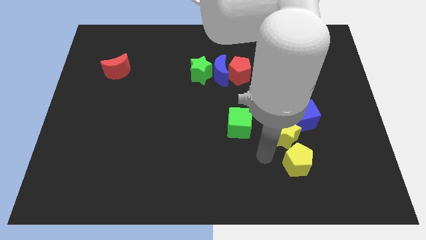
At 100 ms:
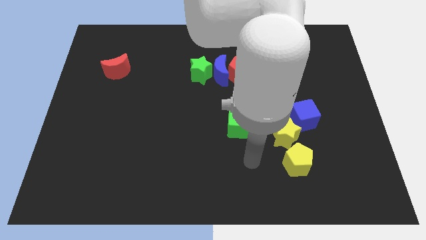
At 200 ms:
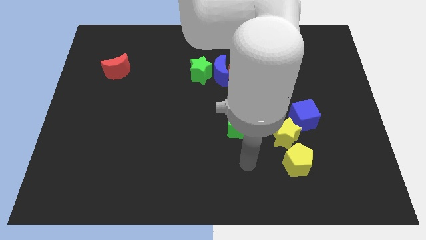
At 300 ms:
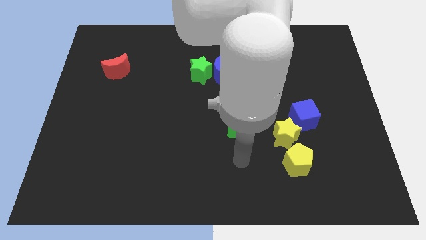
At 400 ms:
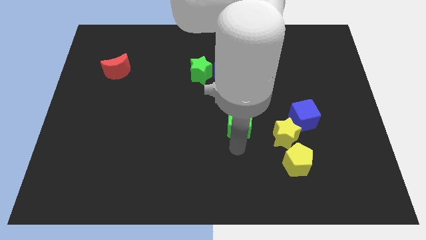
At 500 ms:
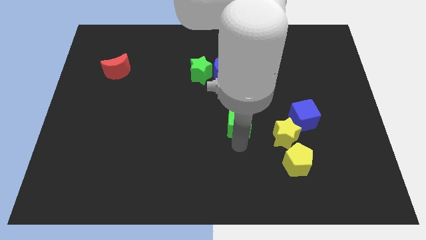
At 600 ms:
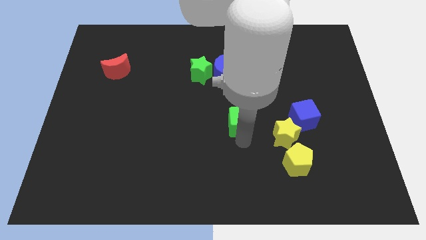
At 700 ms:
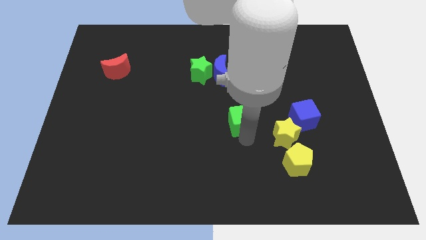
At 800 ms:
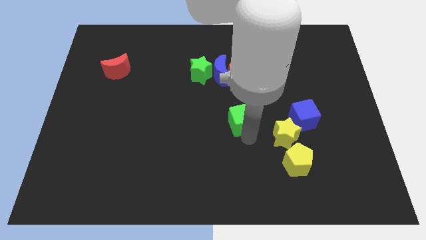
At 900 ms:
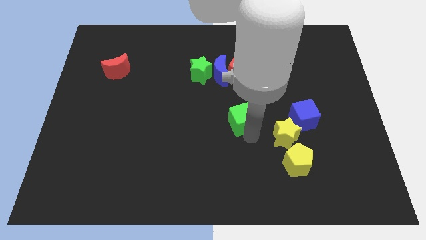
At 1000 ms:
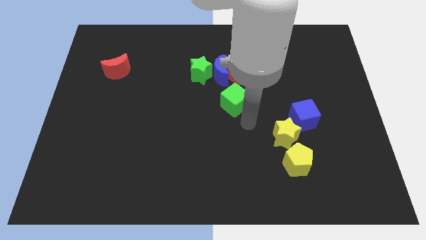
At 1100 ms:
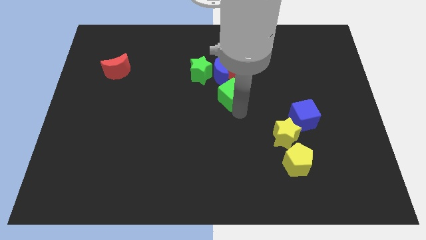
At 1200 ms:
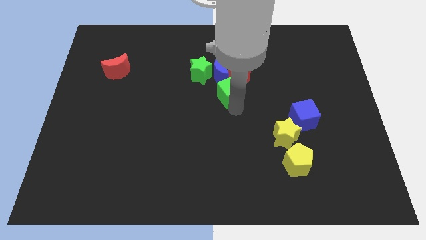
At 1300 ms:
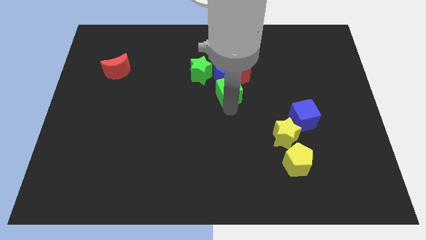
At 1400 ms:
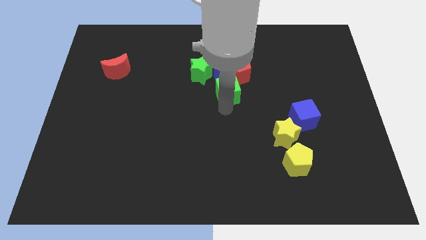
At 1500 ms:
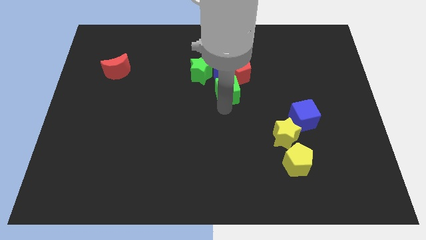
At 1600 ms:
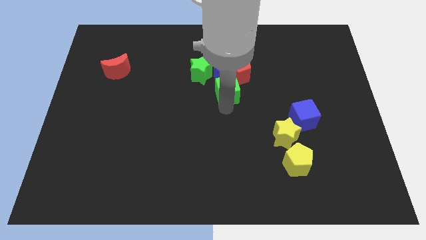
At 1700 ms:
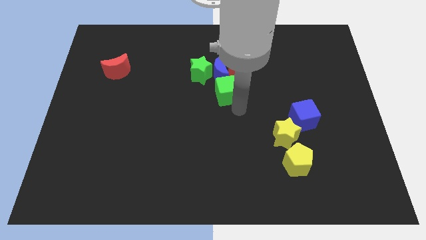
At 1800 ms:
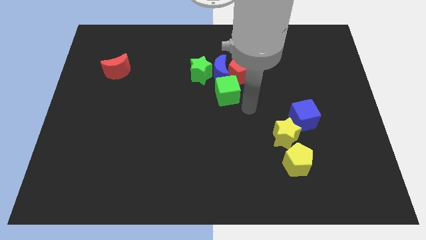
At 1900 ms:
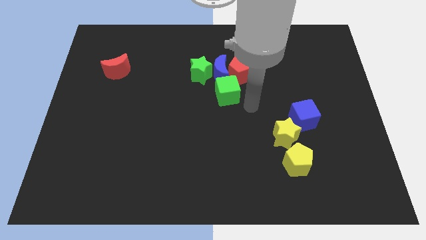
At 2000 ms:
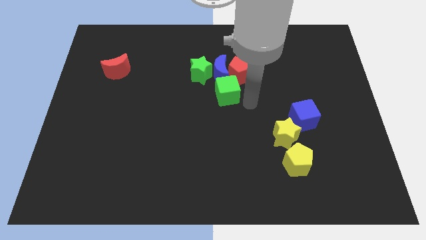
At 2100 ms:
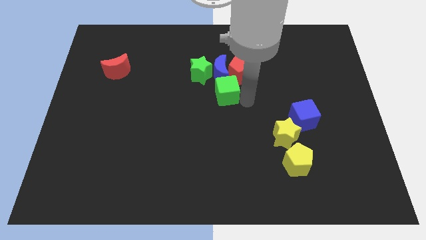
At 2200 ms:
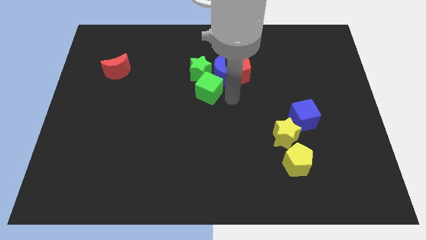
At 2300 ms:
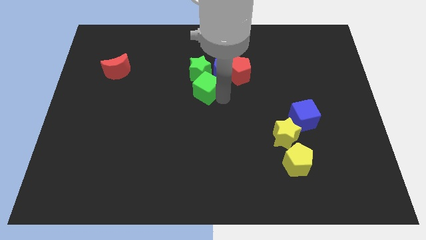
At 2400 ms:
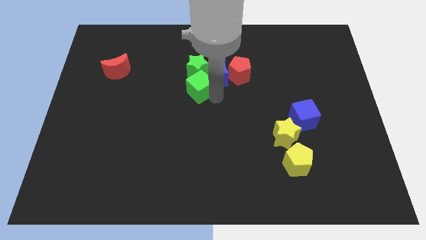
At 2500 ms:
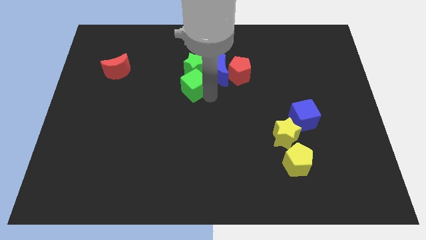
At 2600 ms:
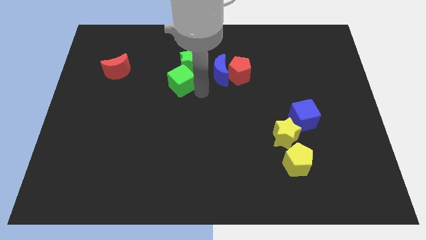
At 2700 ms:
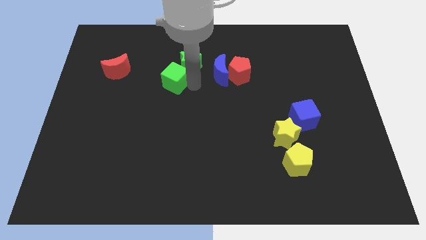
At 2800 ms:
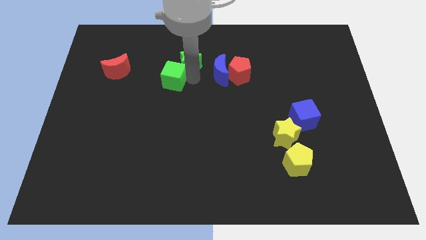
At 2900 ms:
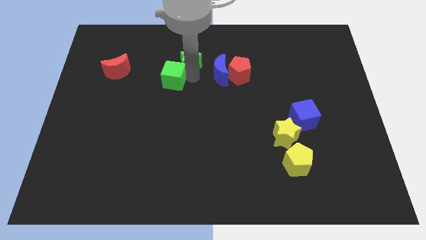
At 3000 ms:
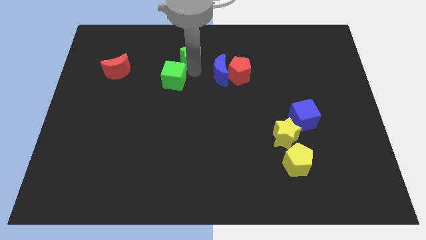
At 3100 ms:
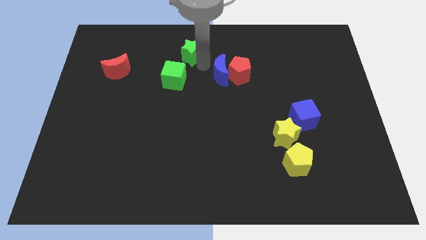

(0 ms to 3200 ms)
place the green cube to the bottom left side of the green star

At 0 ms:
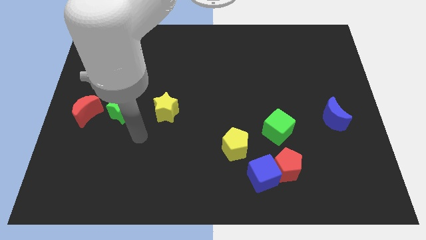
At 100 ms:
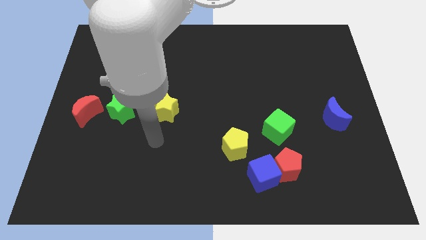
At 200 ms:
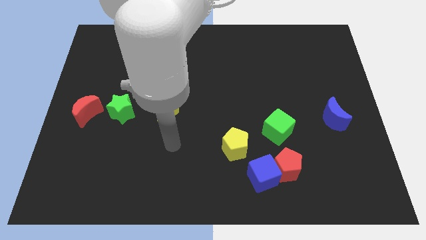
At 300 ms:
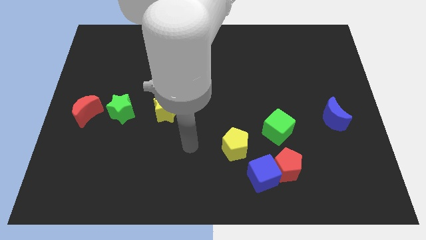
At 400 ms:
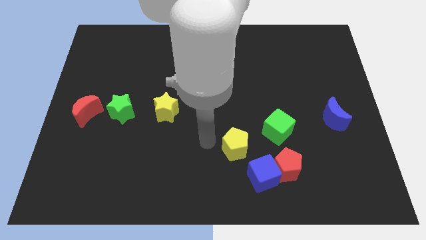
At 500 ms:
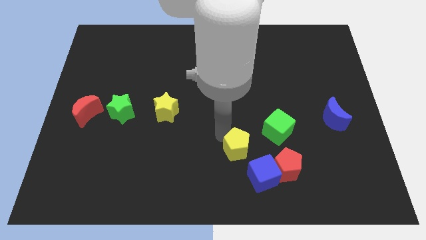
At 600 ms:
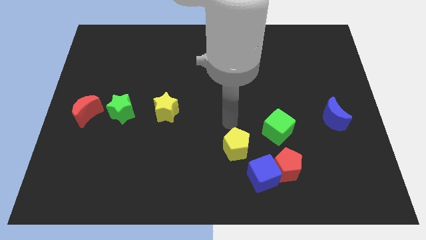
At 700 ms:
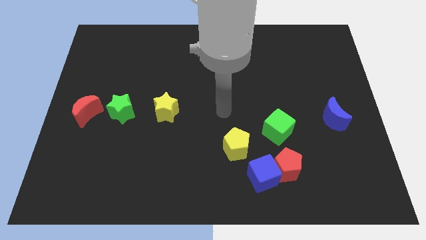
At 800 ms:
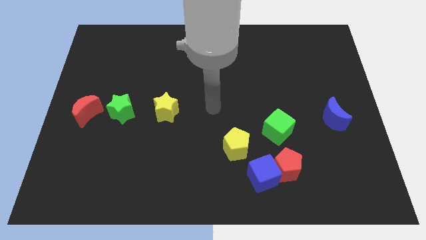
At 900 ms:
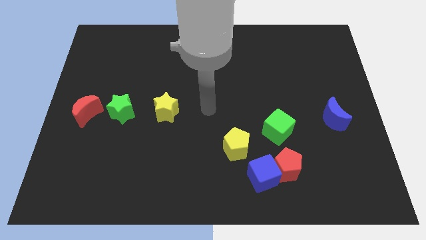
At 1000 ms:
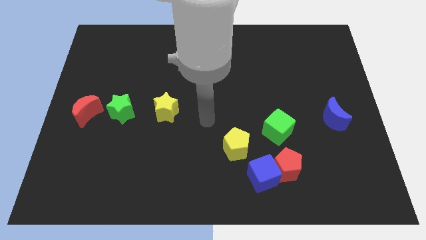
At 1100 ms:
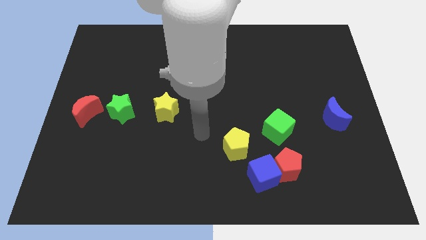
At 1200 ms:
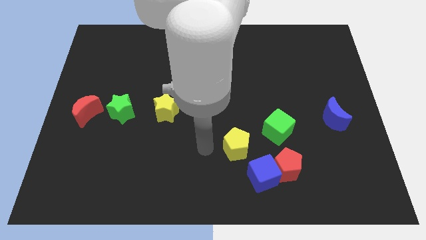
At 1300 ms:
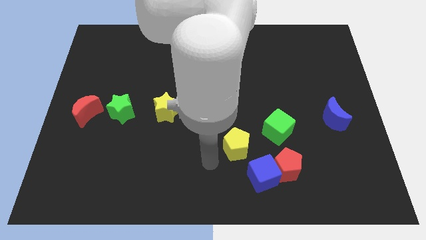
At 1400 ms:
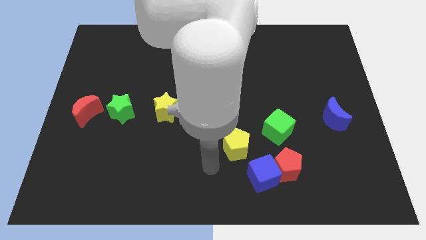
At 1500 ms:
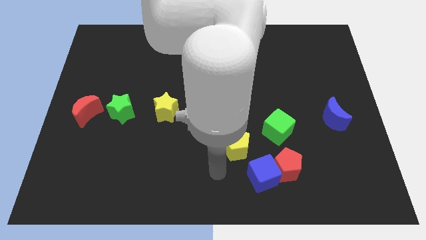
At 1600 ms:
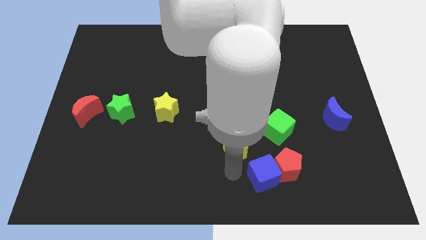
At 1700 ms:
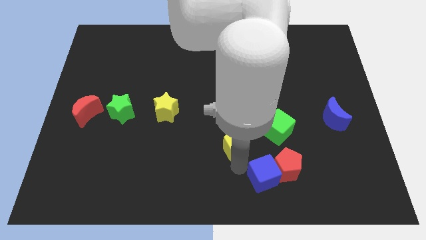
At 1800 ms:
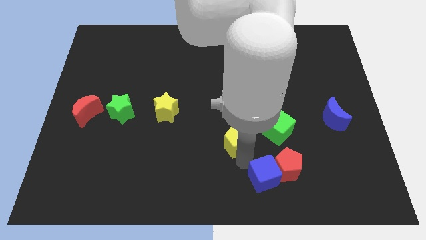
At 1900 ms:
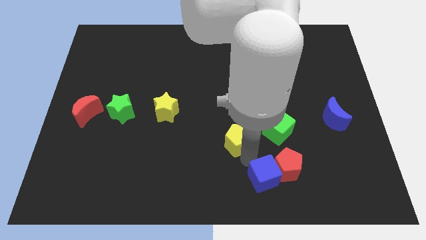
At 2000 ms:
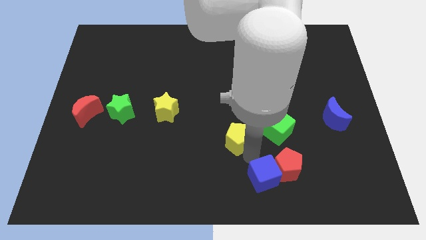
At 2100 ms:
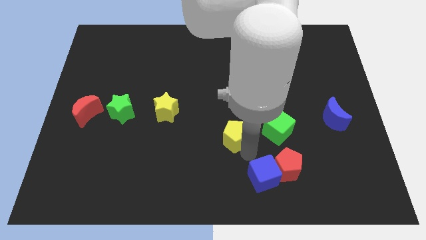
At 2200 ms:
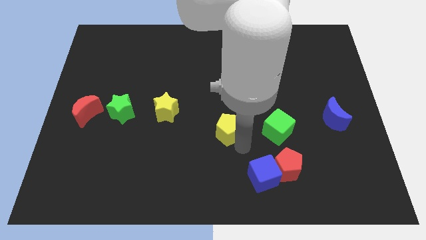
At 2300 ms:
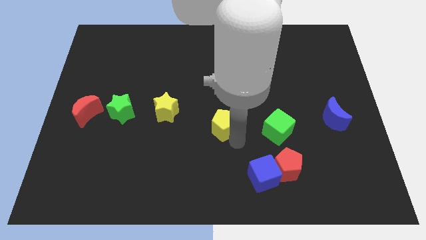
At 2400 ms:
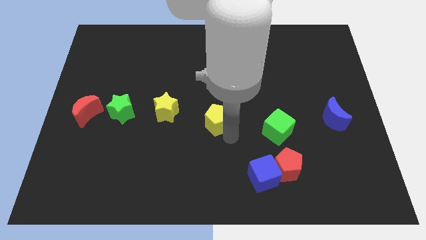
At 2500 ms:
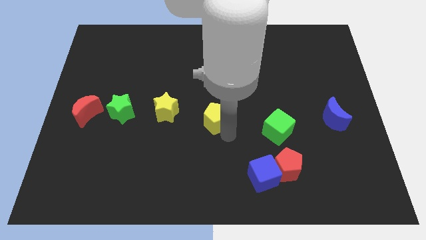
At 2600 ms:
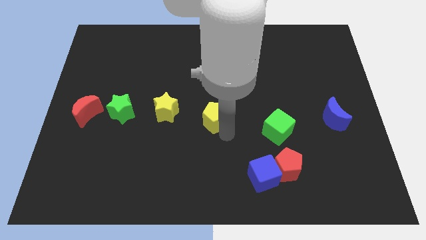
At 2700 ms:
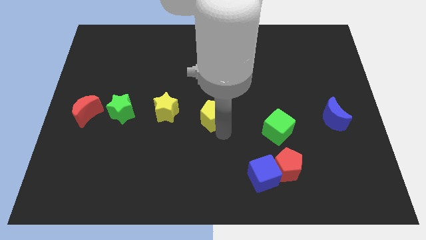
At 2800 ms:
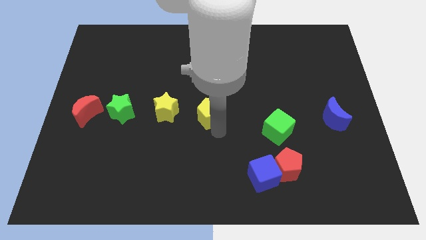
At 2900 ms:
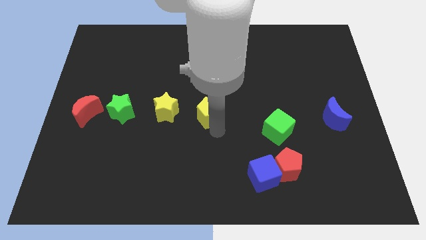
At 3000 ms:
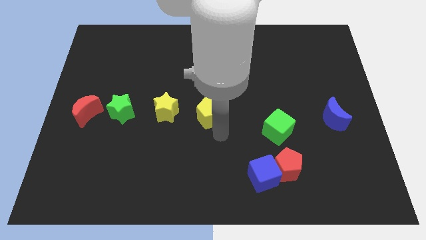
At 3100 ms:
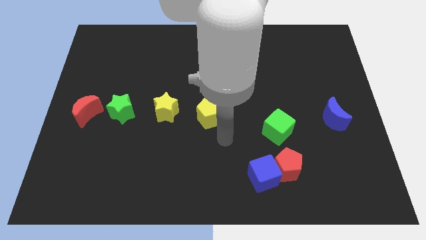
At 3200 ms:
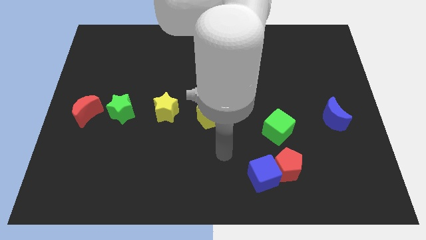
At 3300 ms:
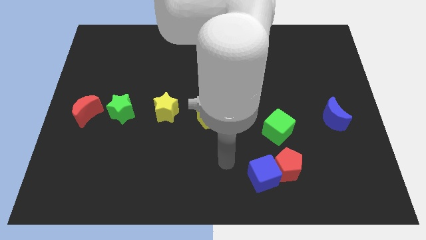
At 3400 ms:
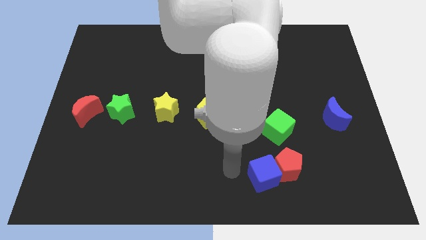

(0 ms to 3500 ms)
push the yellow pentagon parallel to yellow star

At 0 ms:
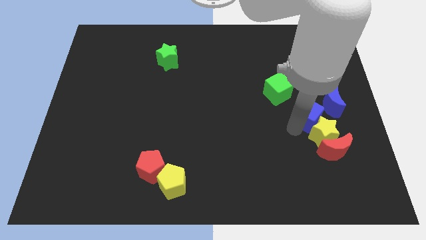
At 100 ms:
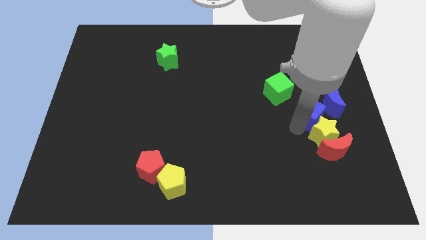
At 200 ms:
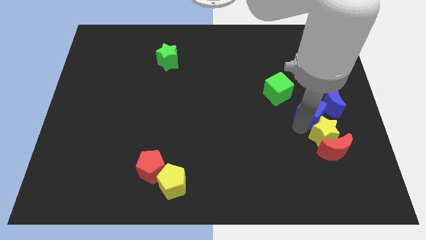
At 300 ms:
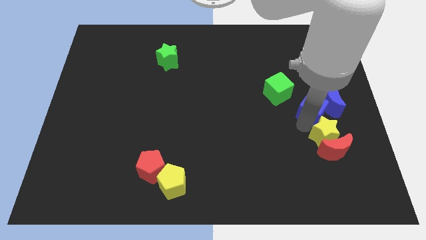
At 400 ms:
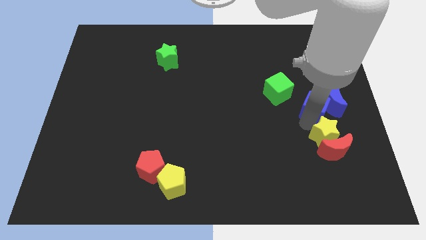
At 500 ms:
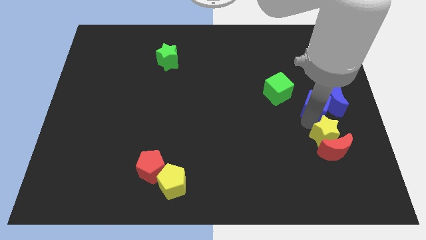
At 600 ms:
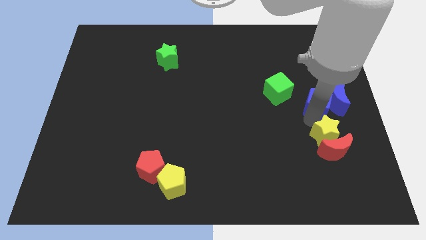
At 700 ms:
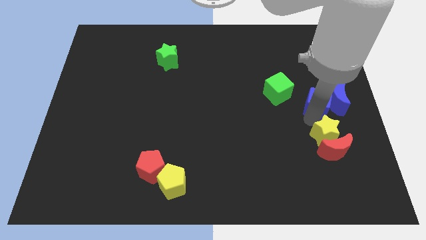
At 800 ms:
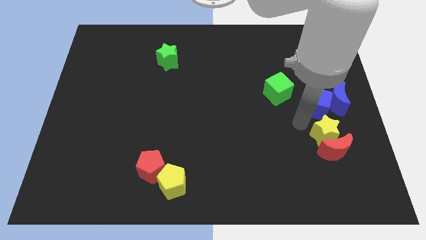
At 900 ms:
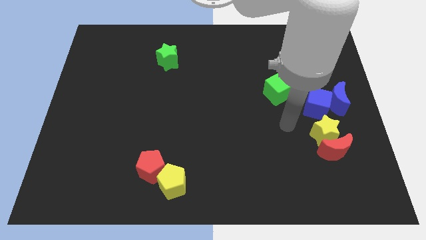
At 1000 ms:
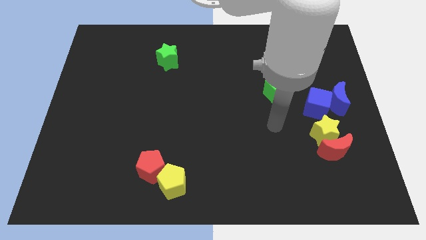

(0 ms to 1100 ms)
push blue cube in to blue moon

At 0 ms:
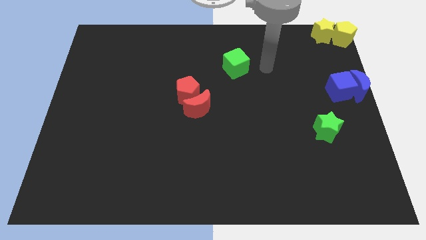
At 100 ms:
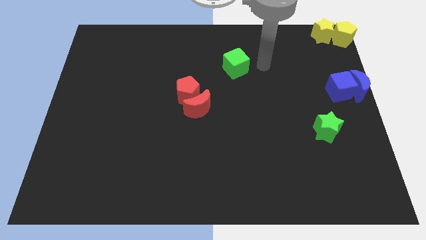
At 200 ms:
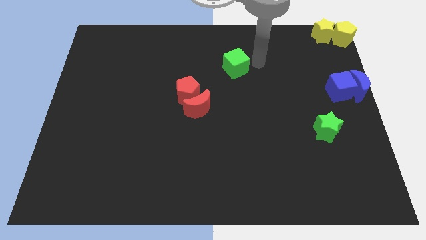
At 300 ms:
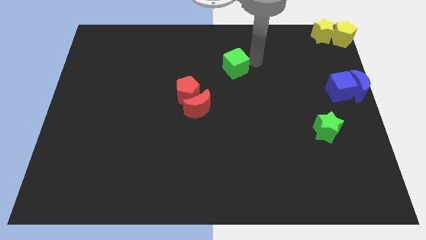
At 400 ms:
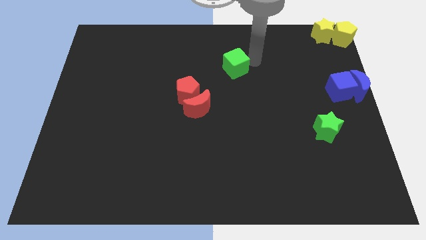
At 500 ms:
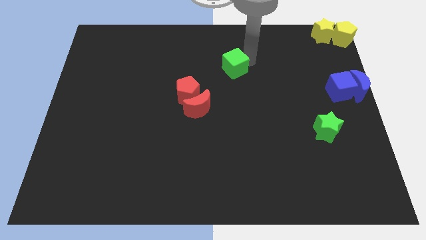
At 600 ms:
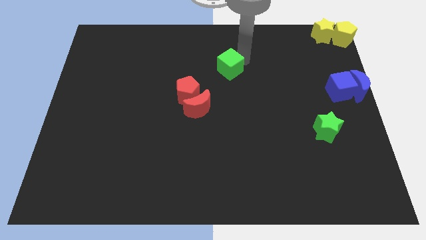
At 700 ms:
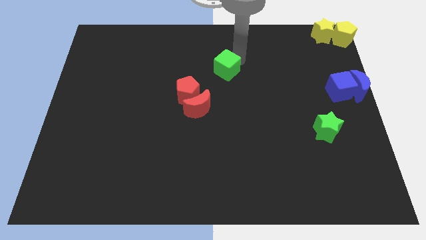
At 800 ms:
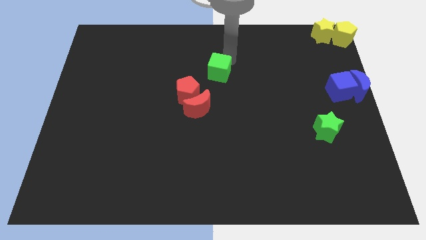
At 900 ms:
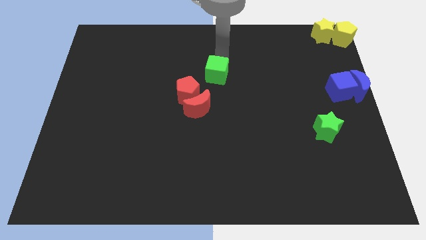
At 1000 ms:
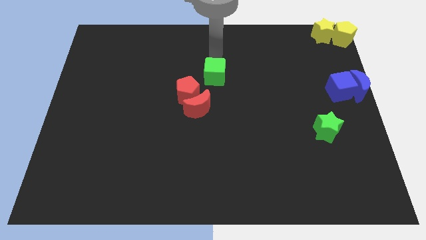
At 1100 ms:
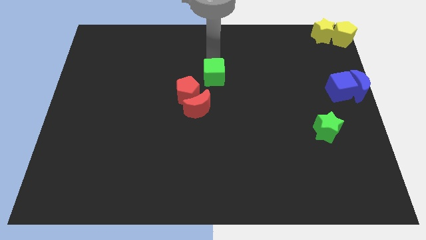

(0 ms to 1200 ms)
move the green cube towards the red pentagon
